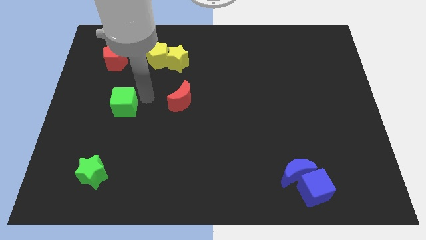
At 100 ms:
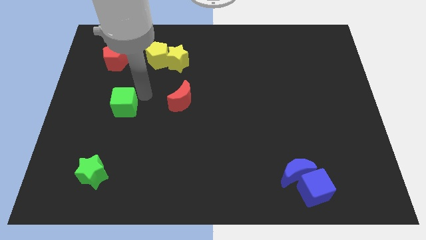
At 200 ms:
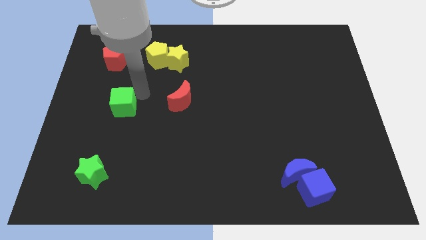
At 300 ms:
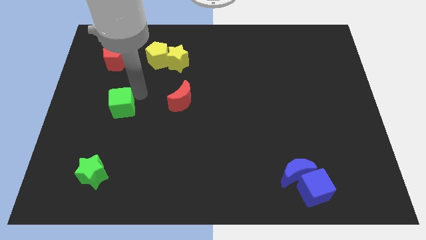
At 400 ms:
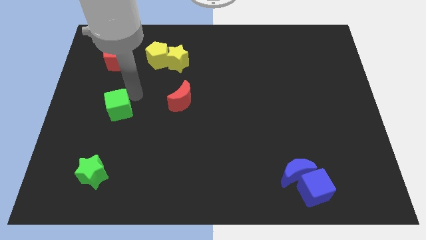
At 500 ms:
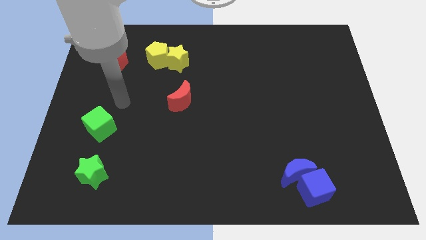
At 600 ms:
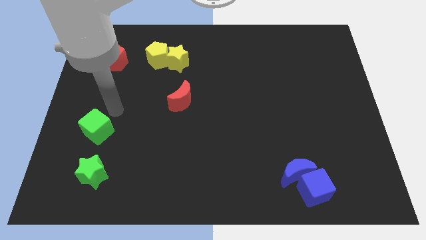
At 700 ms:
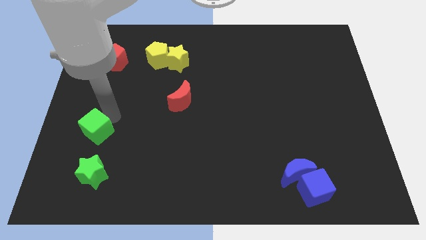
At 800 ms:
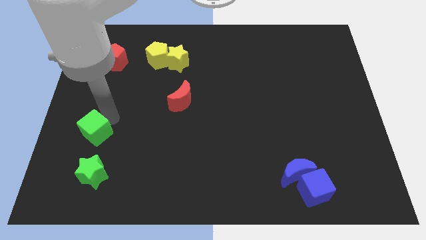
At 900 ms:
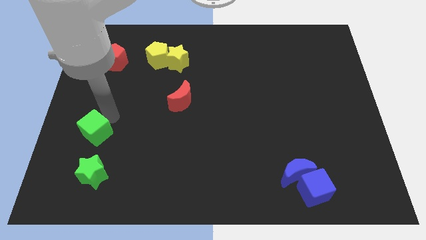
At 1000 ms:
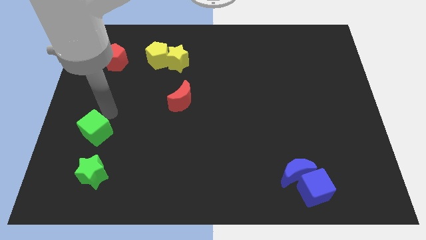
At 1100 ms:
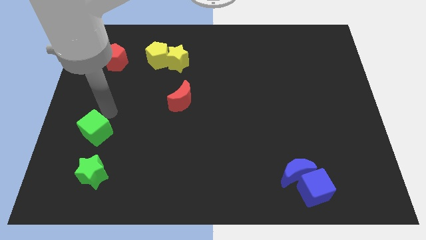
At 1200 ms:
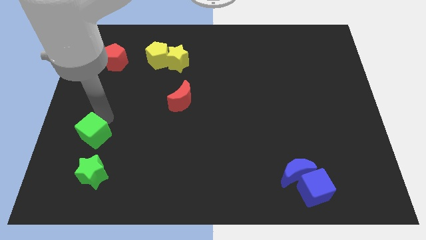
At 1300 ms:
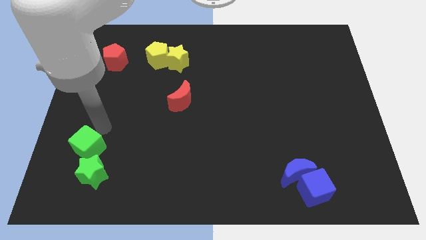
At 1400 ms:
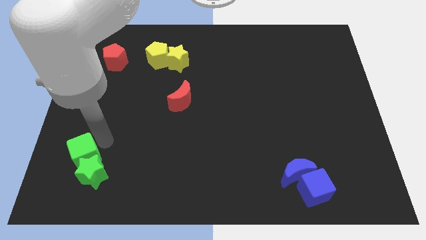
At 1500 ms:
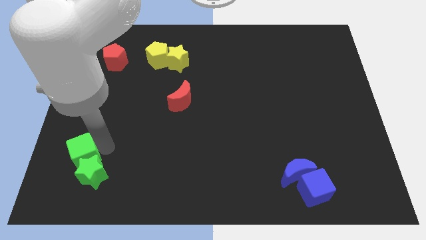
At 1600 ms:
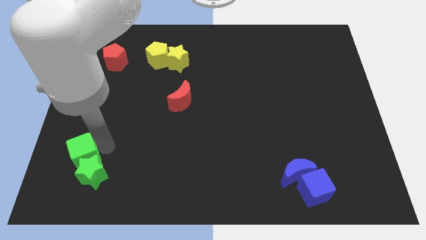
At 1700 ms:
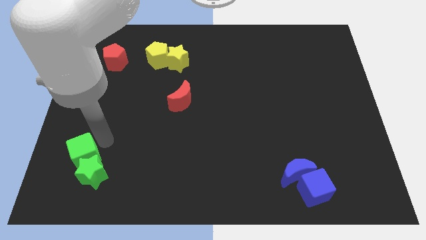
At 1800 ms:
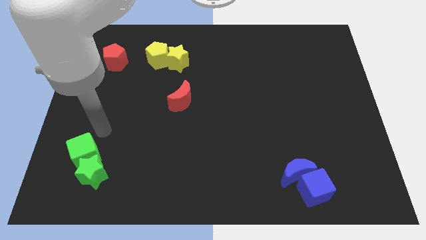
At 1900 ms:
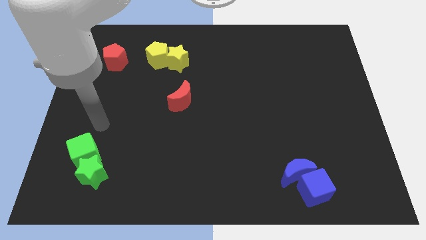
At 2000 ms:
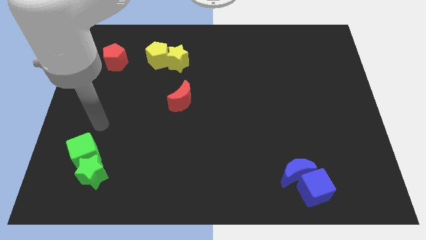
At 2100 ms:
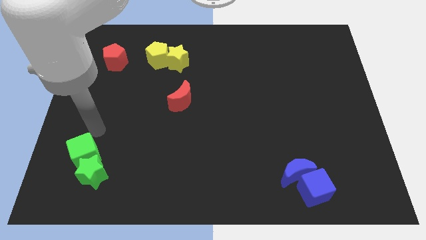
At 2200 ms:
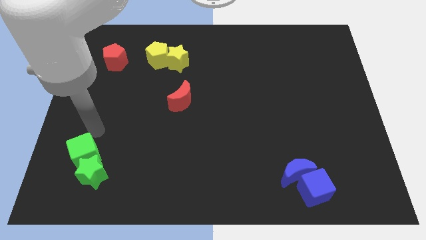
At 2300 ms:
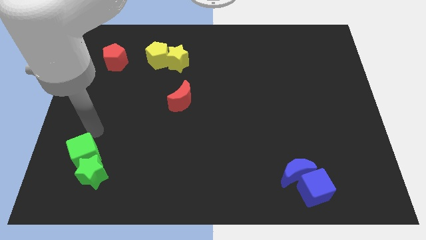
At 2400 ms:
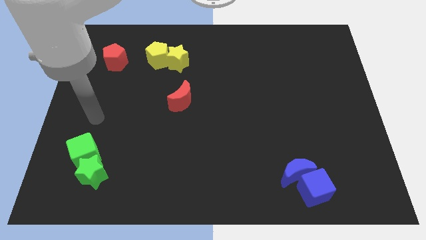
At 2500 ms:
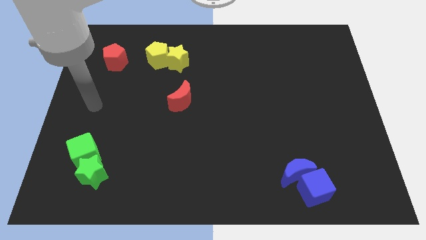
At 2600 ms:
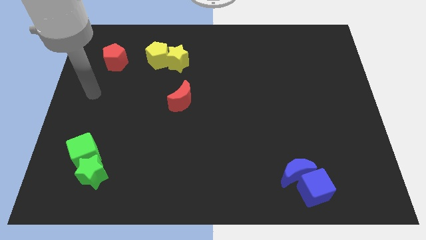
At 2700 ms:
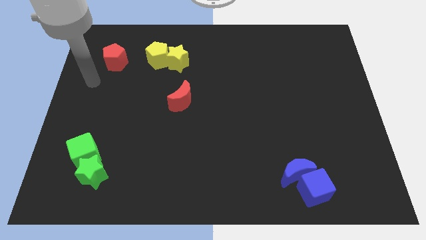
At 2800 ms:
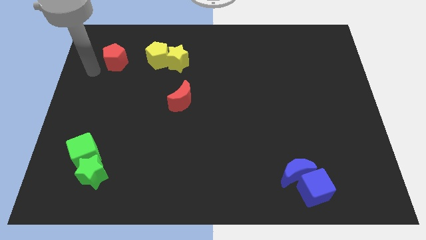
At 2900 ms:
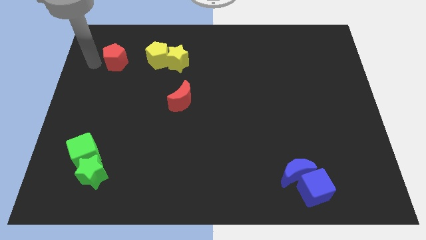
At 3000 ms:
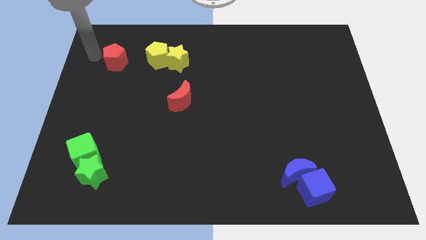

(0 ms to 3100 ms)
push the green cube into the green star

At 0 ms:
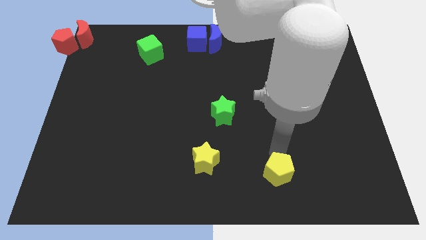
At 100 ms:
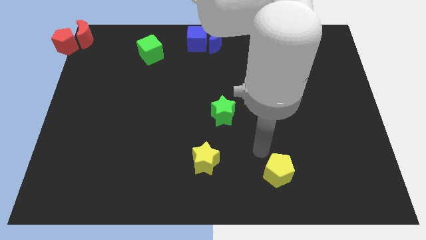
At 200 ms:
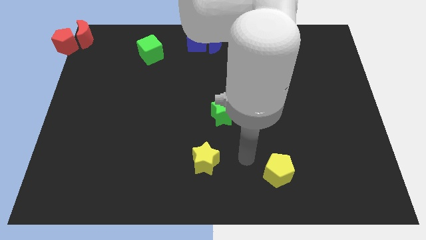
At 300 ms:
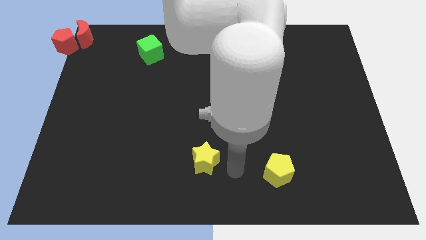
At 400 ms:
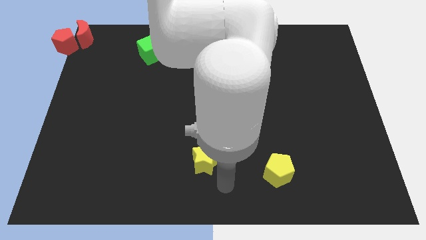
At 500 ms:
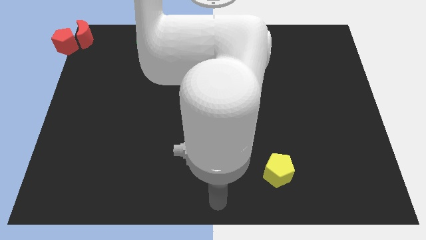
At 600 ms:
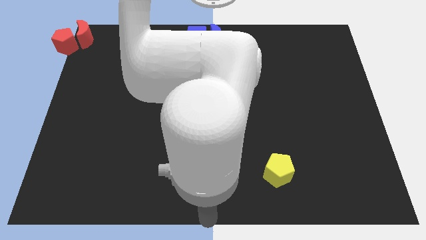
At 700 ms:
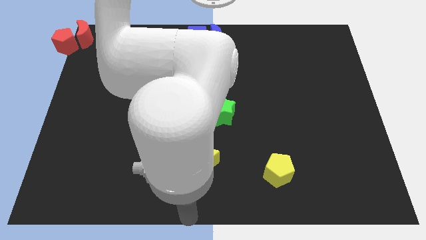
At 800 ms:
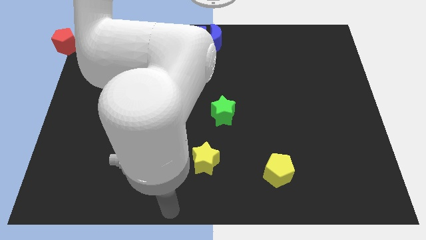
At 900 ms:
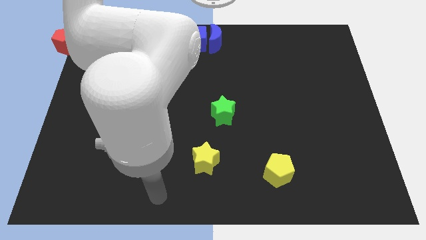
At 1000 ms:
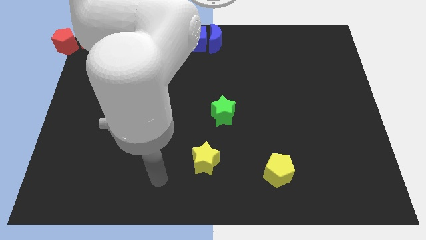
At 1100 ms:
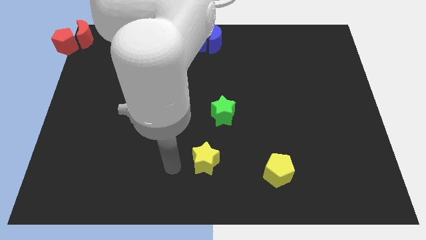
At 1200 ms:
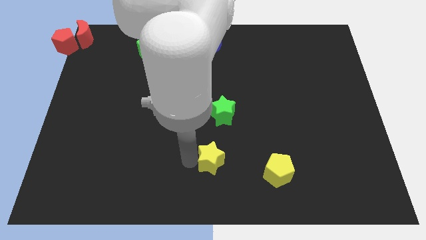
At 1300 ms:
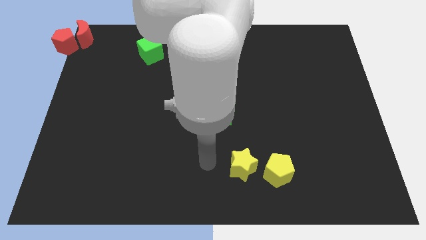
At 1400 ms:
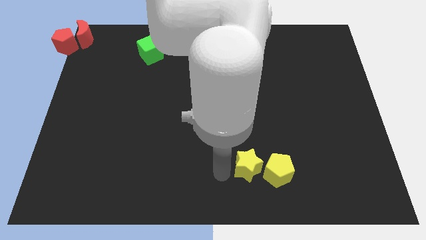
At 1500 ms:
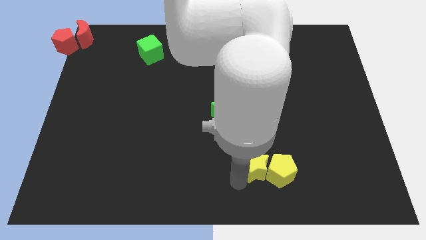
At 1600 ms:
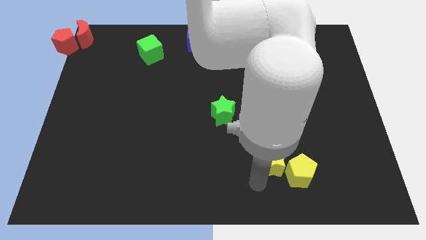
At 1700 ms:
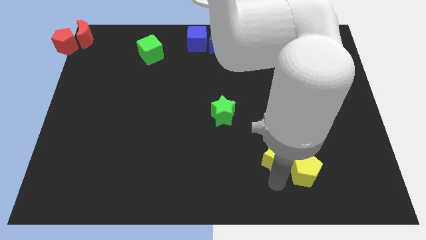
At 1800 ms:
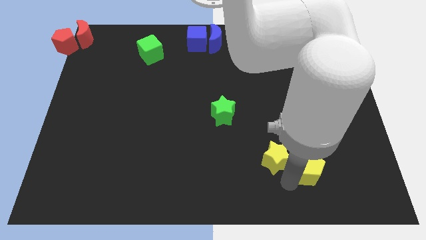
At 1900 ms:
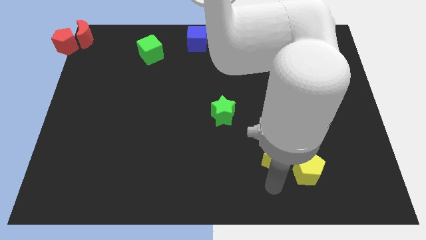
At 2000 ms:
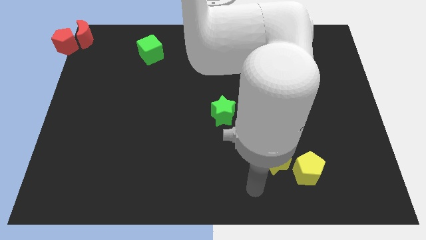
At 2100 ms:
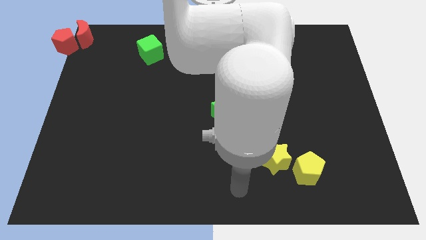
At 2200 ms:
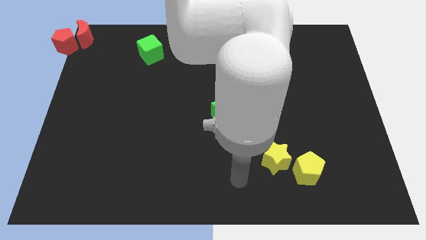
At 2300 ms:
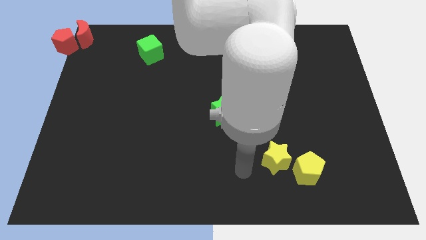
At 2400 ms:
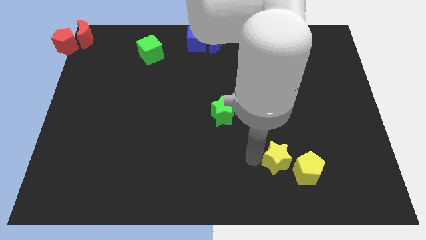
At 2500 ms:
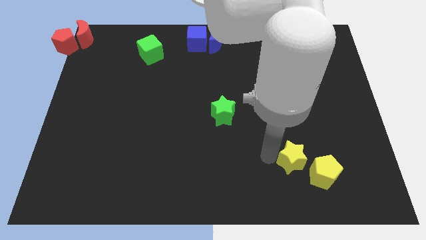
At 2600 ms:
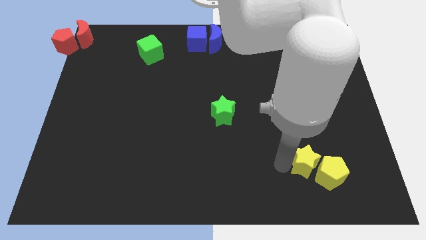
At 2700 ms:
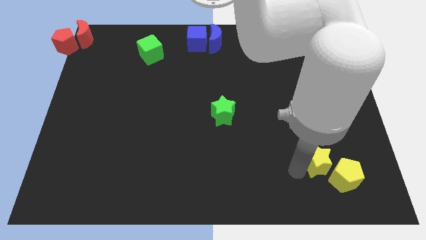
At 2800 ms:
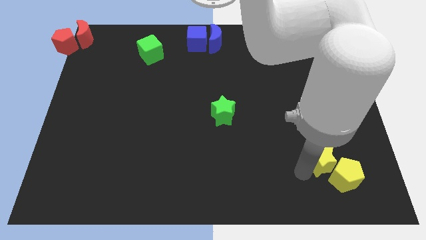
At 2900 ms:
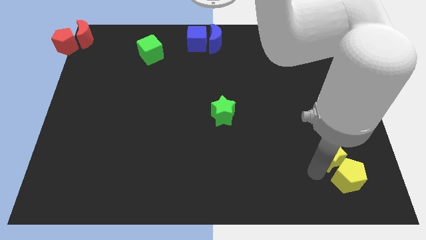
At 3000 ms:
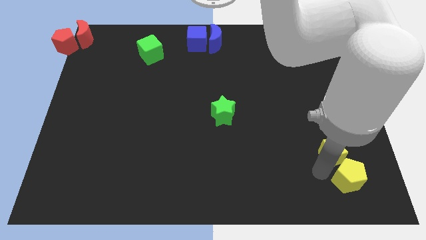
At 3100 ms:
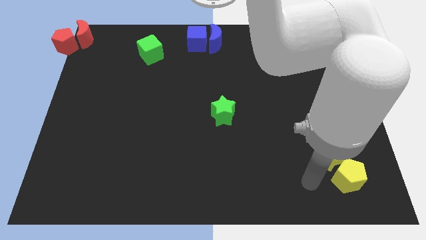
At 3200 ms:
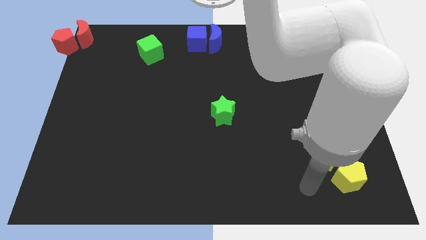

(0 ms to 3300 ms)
push the yellow star into the yellow pentagon

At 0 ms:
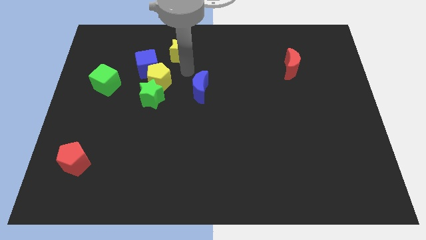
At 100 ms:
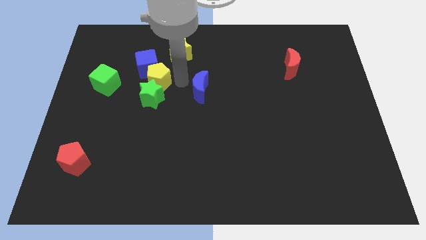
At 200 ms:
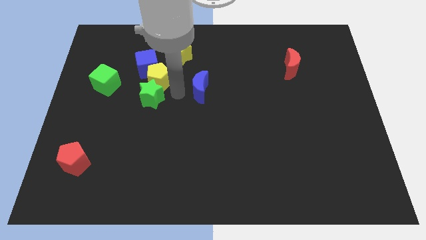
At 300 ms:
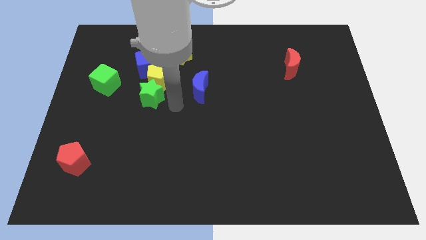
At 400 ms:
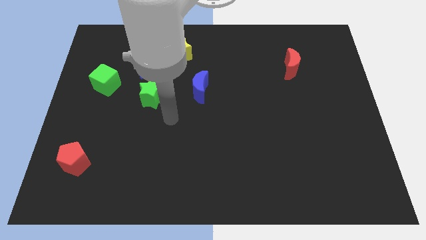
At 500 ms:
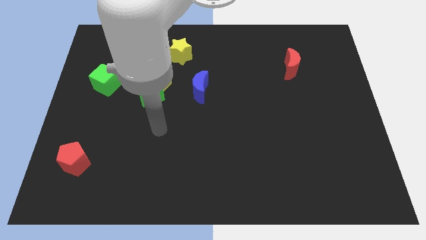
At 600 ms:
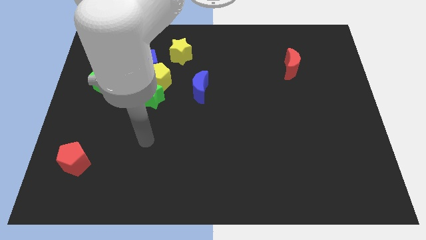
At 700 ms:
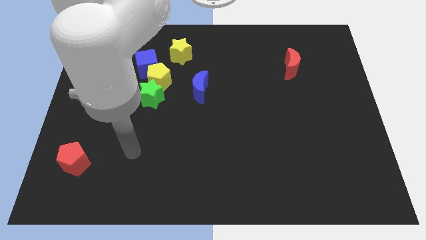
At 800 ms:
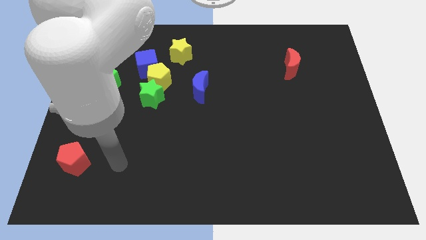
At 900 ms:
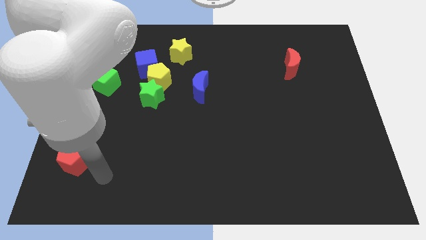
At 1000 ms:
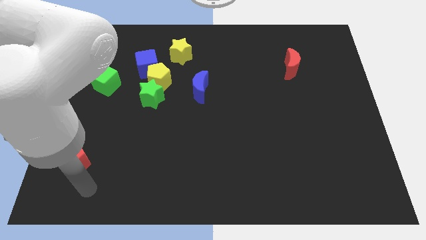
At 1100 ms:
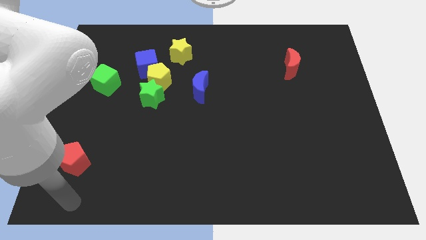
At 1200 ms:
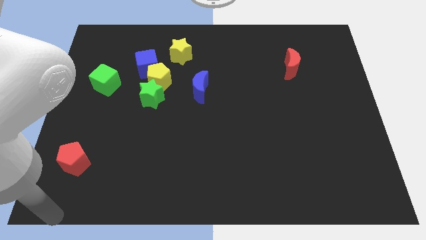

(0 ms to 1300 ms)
move the arm away from the yellow star

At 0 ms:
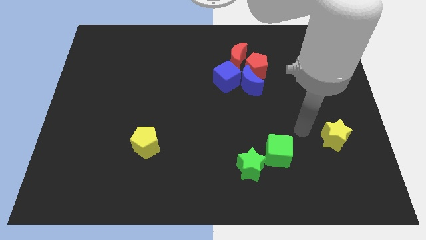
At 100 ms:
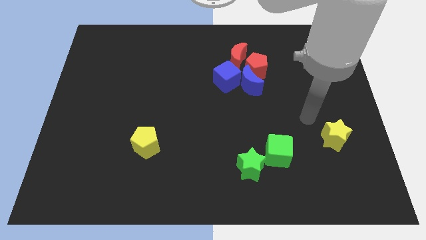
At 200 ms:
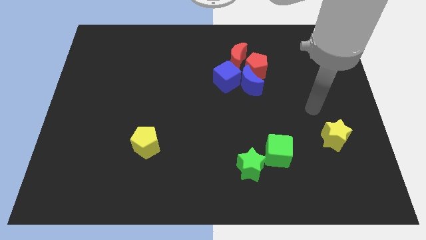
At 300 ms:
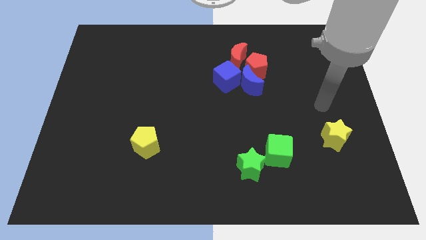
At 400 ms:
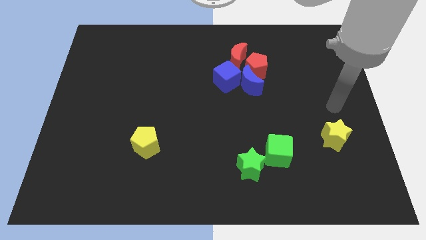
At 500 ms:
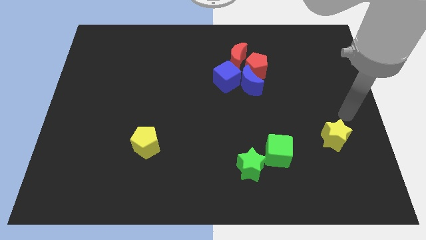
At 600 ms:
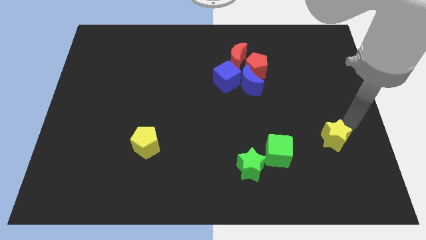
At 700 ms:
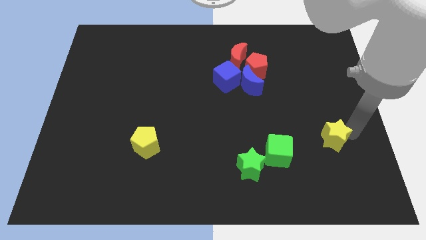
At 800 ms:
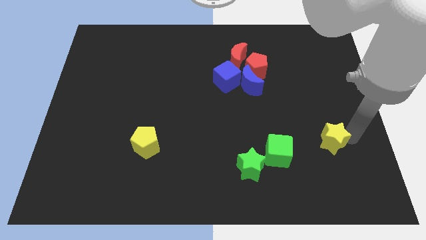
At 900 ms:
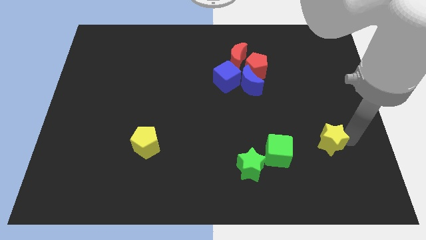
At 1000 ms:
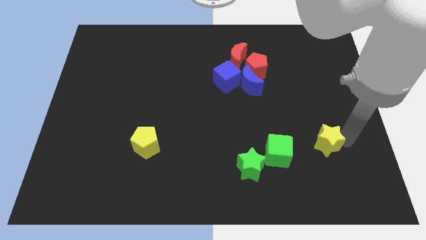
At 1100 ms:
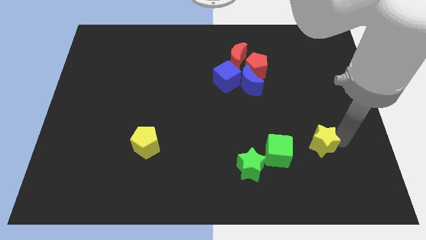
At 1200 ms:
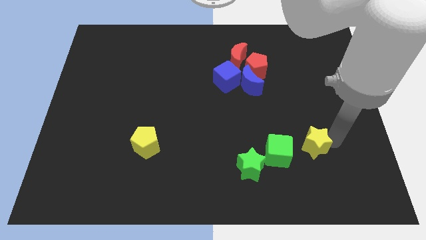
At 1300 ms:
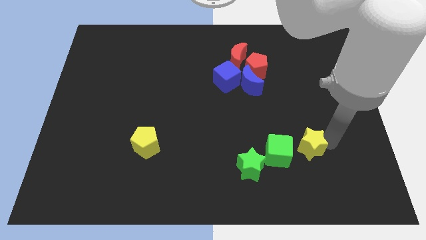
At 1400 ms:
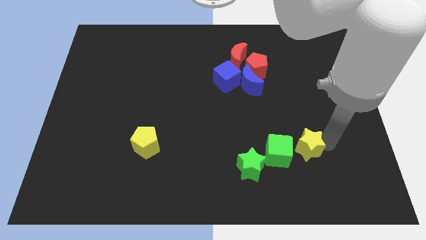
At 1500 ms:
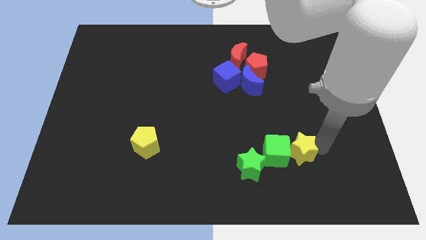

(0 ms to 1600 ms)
push the yellow star into the green cube
